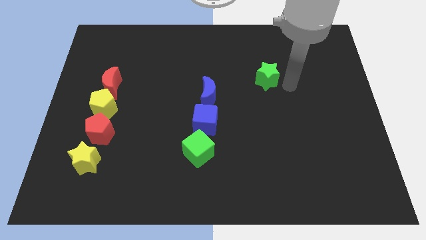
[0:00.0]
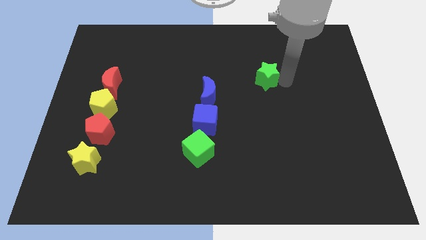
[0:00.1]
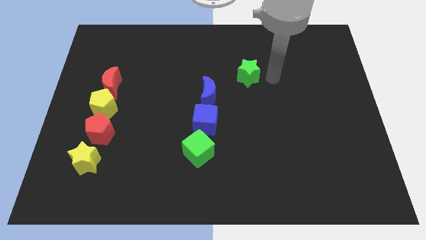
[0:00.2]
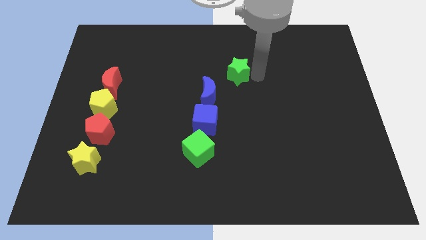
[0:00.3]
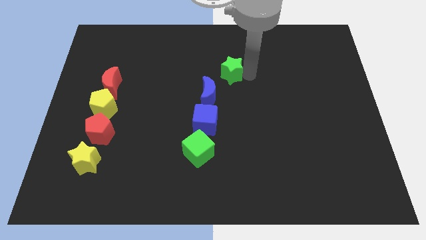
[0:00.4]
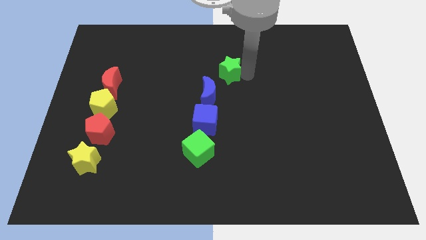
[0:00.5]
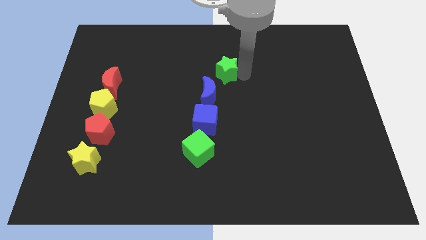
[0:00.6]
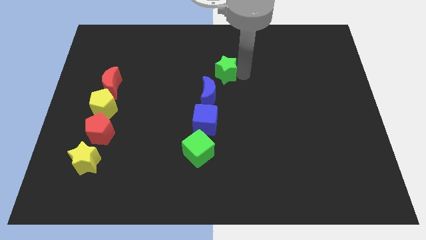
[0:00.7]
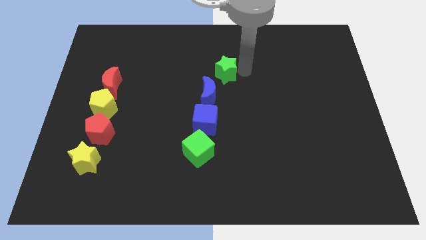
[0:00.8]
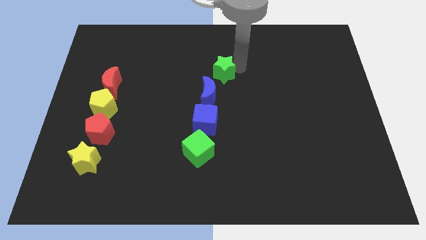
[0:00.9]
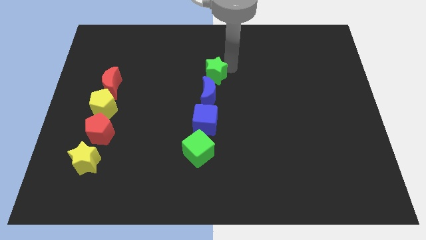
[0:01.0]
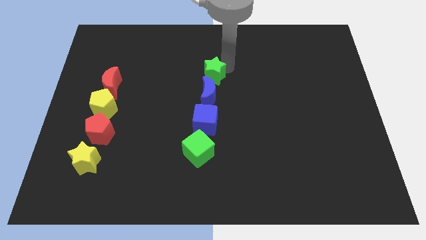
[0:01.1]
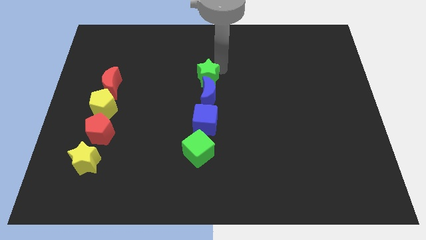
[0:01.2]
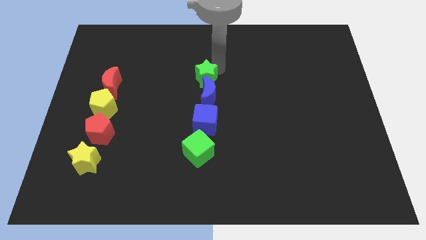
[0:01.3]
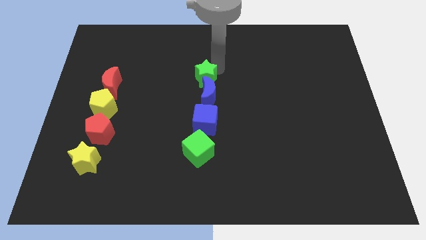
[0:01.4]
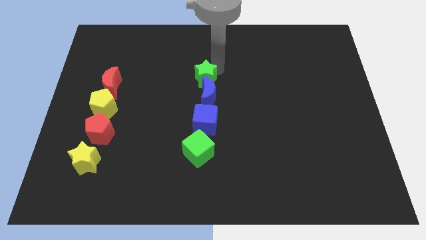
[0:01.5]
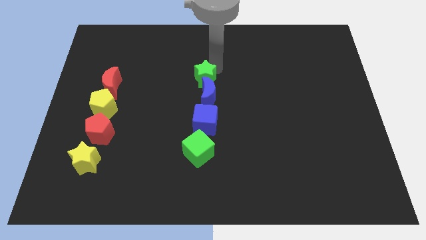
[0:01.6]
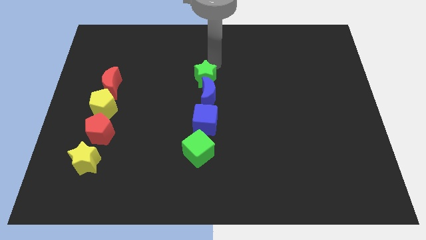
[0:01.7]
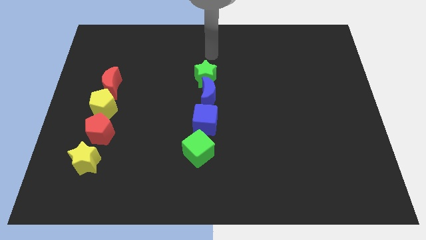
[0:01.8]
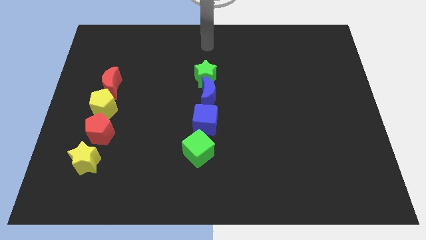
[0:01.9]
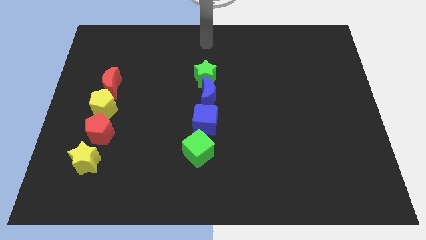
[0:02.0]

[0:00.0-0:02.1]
place the green star above the blue moon

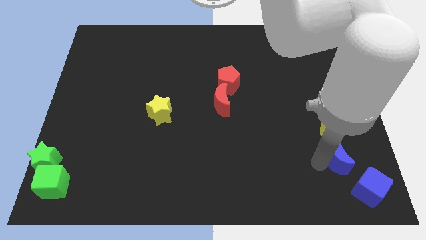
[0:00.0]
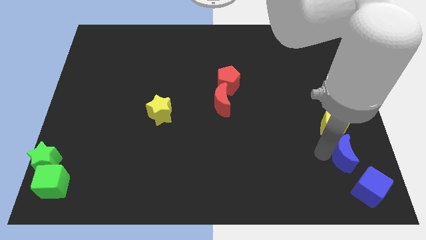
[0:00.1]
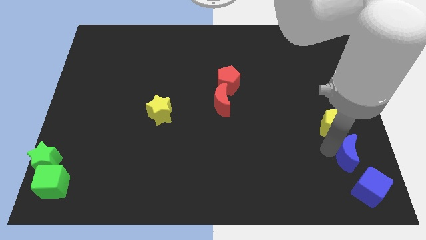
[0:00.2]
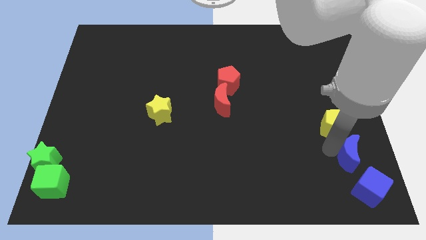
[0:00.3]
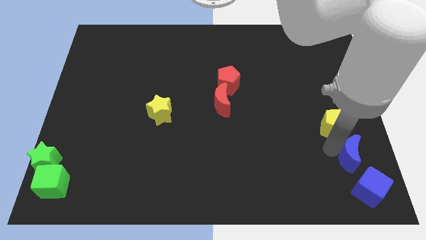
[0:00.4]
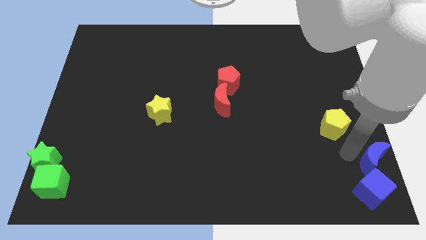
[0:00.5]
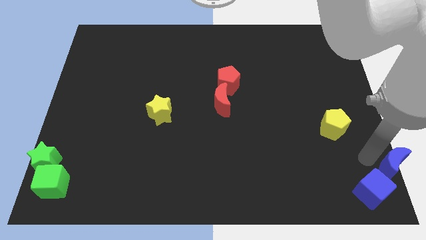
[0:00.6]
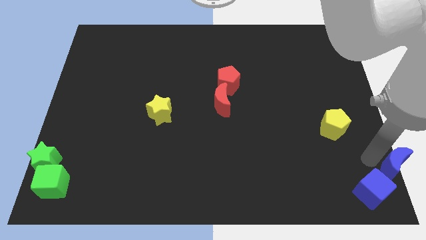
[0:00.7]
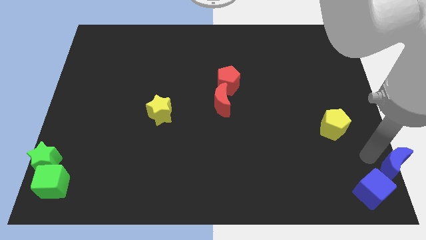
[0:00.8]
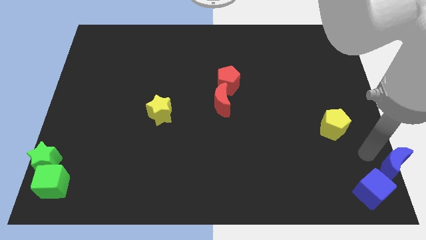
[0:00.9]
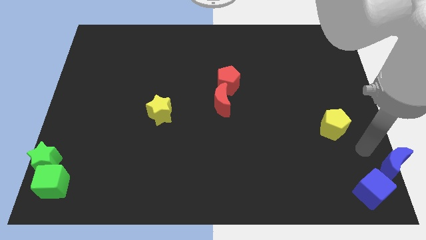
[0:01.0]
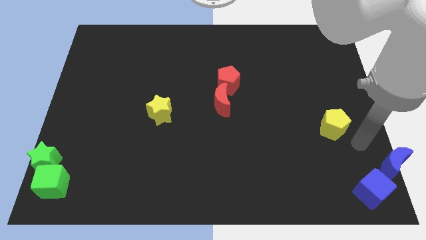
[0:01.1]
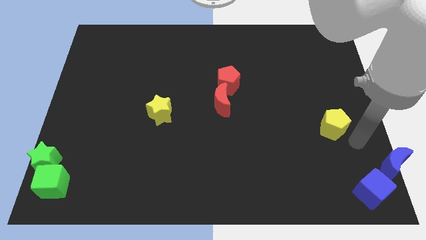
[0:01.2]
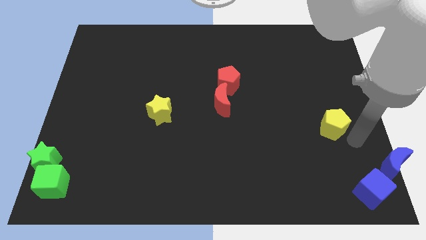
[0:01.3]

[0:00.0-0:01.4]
move the blue moon diagonal top right to the blue cube

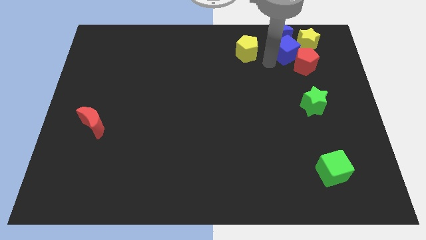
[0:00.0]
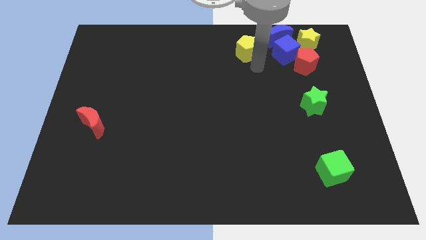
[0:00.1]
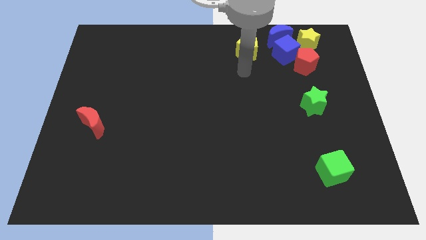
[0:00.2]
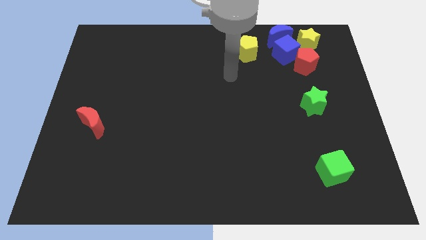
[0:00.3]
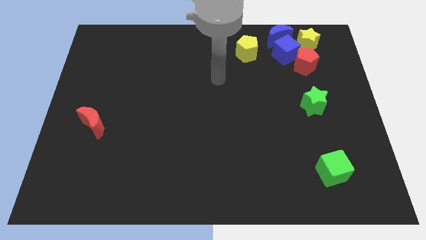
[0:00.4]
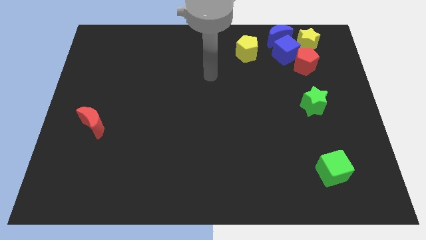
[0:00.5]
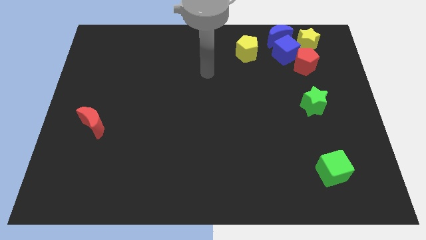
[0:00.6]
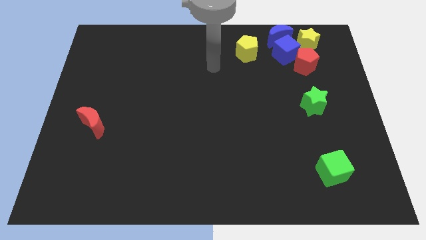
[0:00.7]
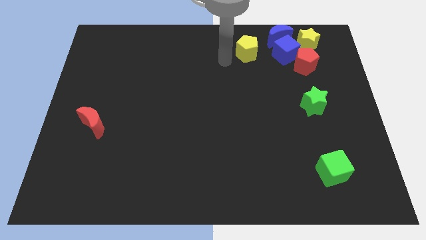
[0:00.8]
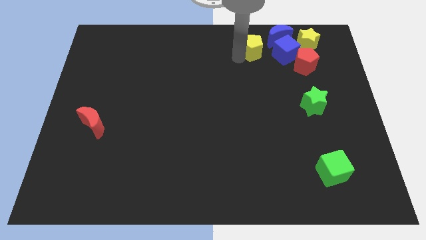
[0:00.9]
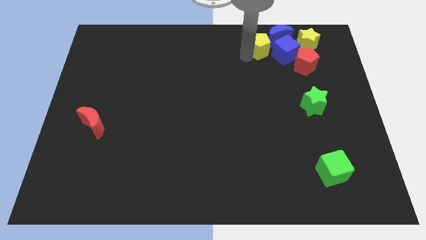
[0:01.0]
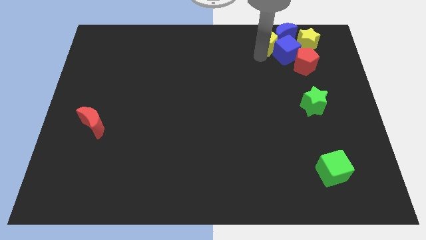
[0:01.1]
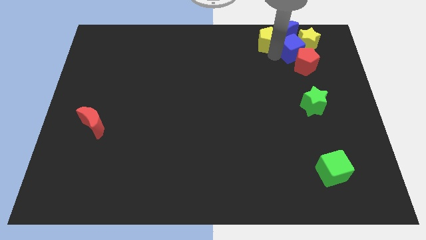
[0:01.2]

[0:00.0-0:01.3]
move the yellow pentagon into the blue crescent

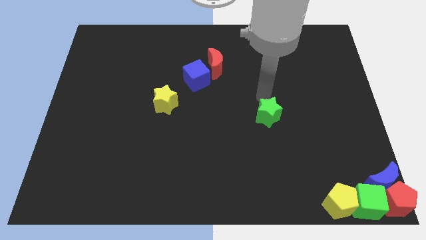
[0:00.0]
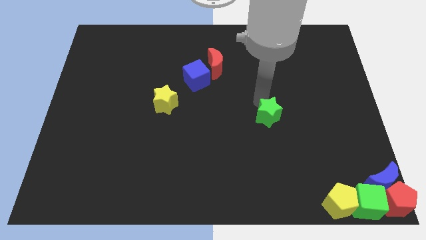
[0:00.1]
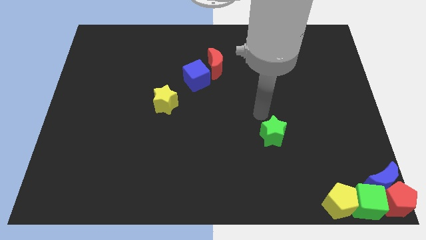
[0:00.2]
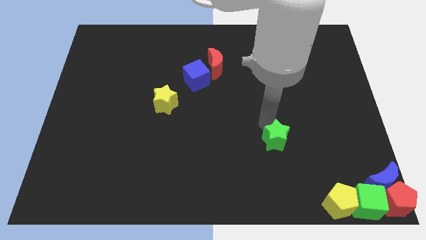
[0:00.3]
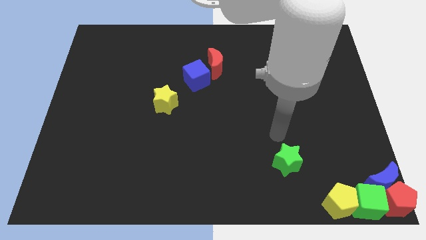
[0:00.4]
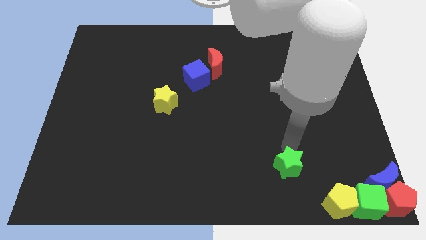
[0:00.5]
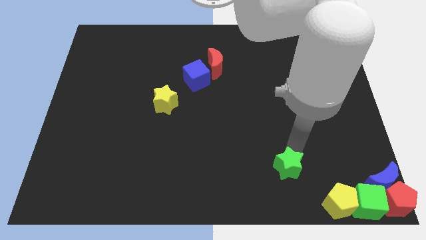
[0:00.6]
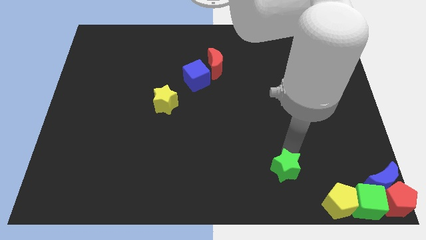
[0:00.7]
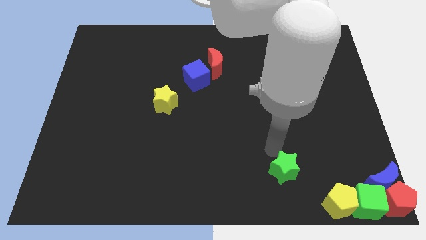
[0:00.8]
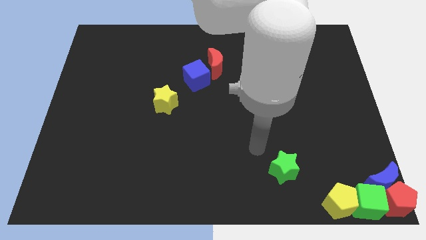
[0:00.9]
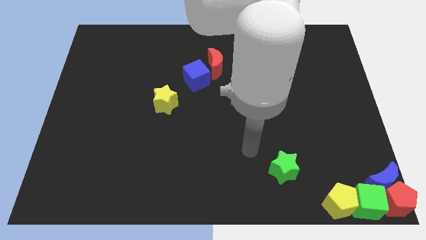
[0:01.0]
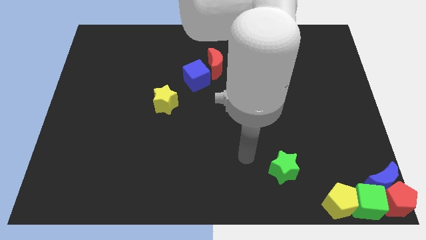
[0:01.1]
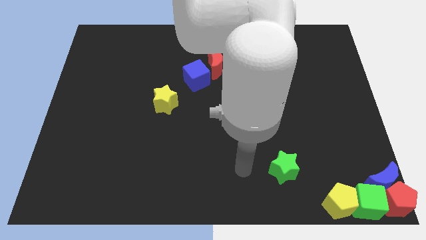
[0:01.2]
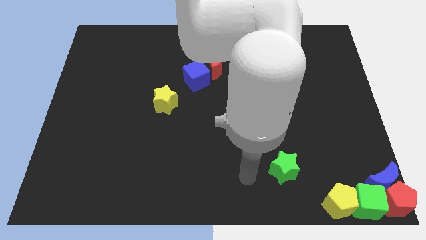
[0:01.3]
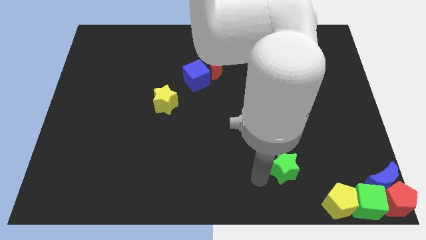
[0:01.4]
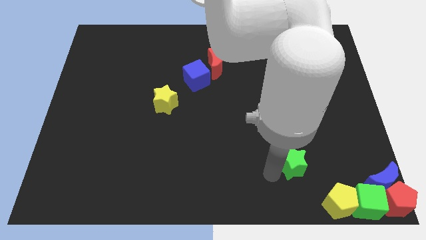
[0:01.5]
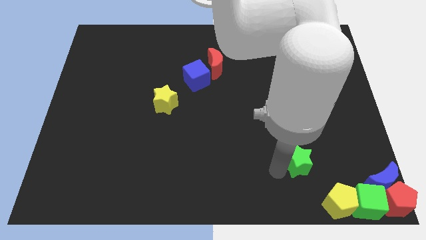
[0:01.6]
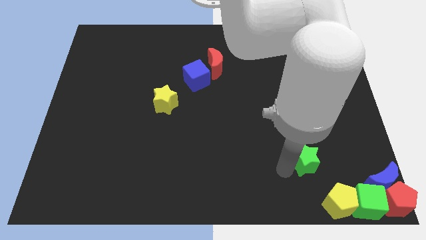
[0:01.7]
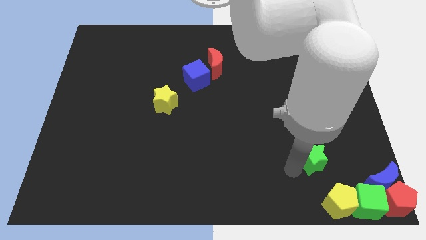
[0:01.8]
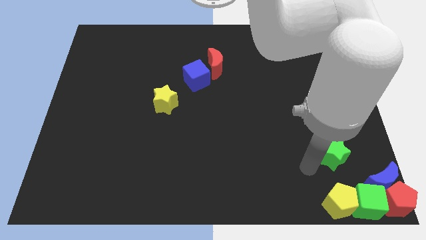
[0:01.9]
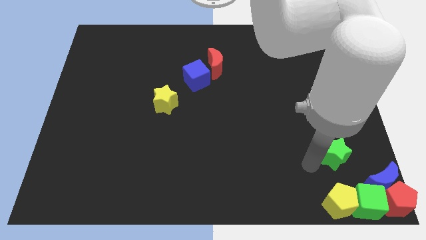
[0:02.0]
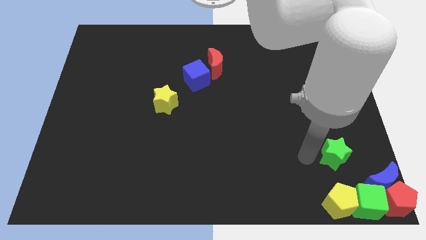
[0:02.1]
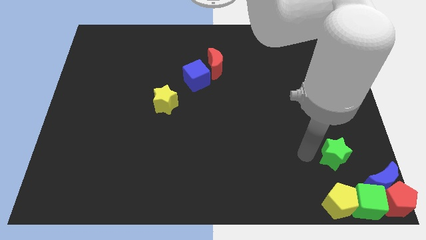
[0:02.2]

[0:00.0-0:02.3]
push the green star to the top of the yellow pentagon

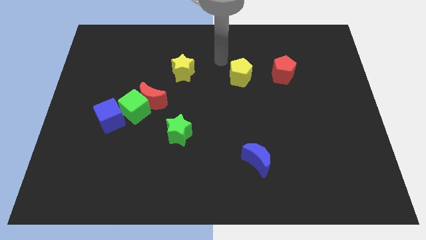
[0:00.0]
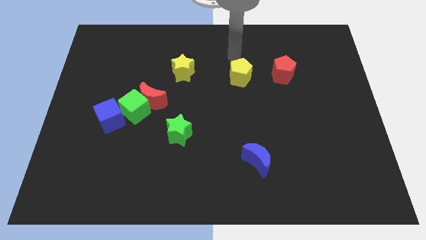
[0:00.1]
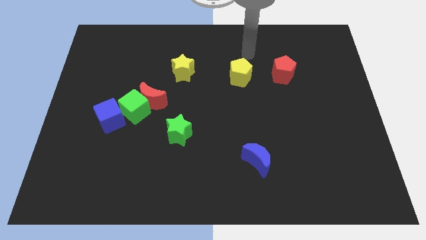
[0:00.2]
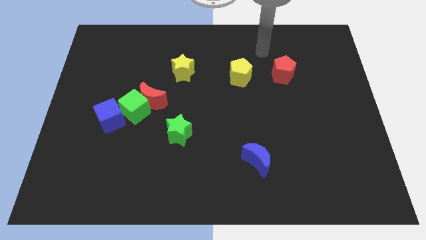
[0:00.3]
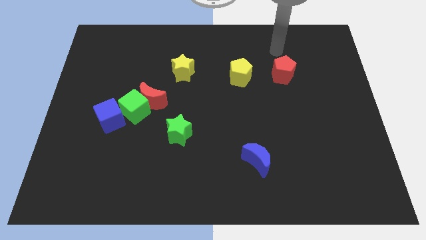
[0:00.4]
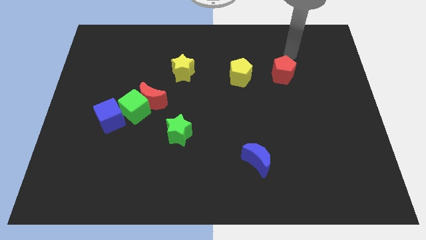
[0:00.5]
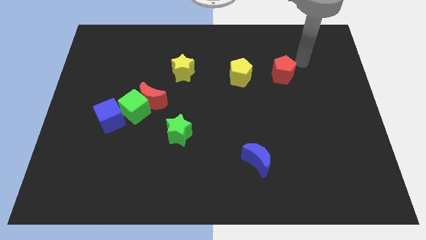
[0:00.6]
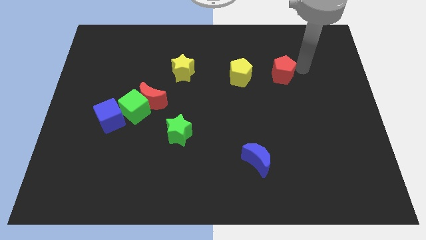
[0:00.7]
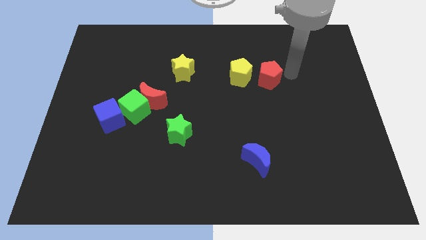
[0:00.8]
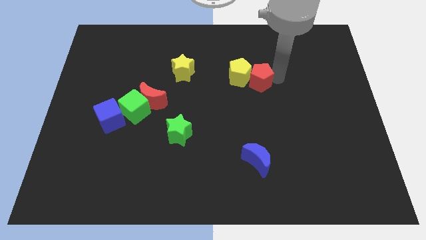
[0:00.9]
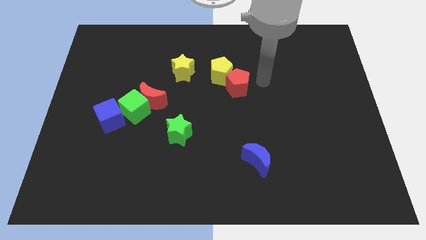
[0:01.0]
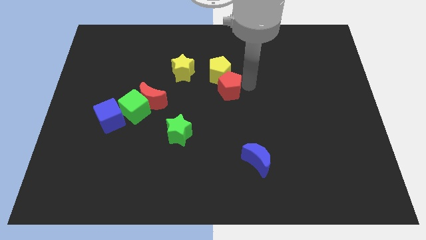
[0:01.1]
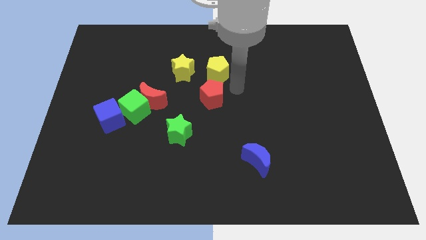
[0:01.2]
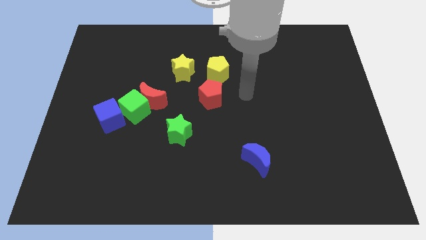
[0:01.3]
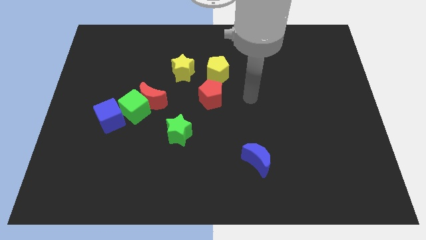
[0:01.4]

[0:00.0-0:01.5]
push the red pentagon to the bottom of the yellow pentagon

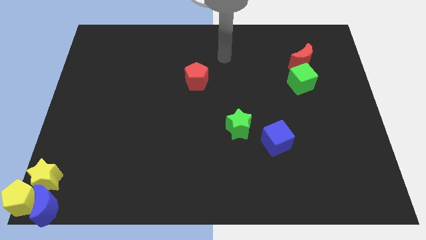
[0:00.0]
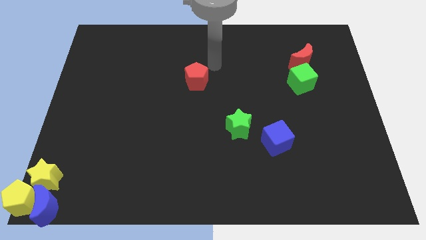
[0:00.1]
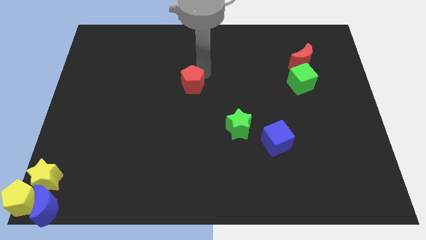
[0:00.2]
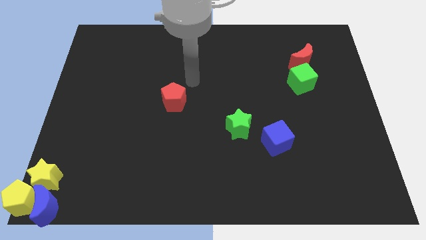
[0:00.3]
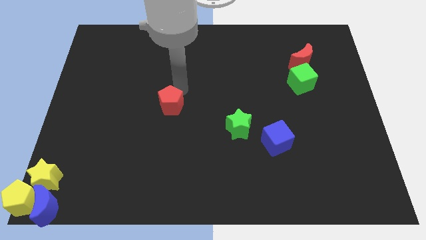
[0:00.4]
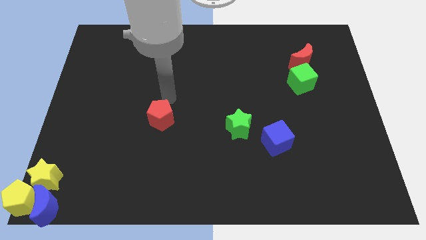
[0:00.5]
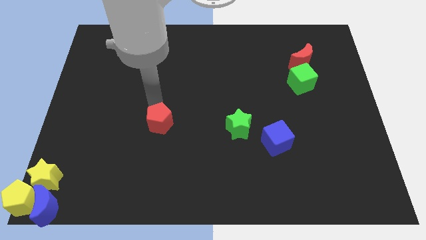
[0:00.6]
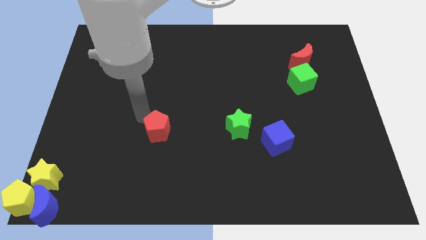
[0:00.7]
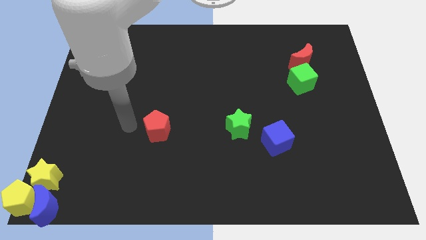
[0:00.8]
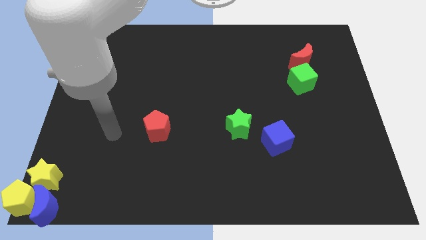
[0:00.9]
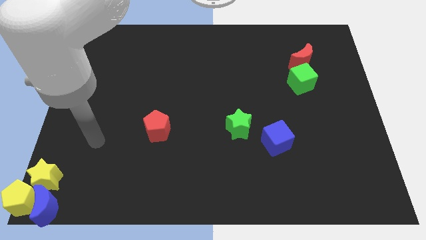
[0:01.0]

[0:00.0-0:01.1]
slide red pentagon down to the left of green star
